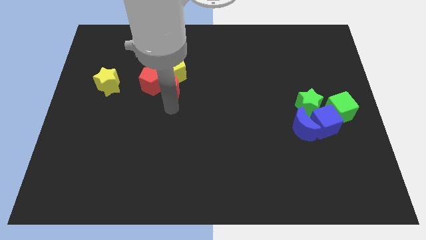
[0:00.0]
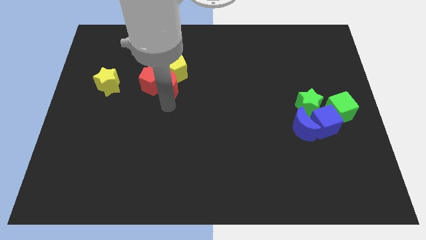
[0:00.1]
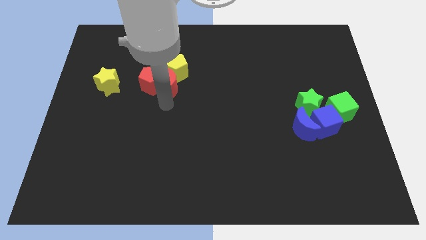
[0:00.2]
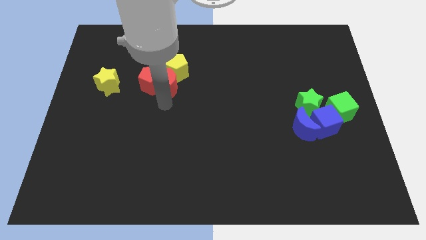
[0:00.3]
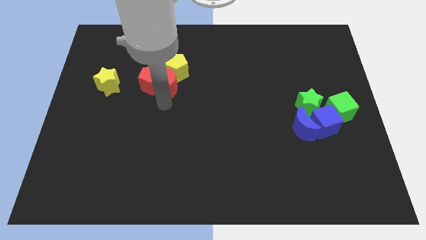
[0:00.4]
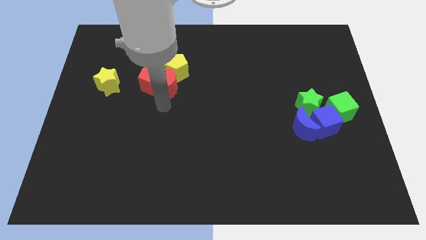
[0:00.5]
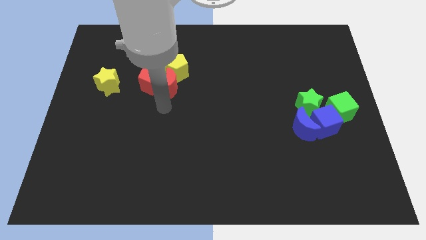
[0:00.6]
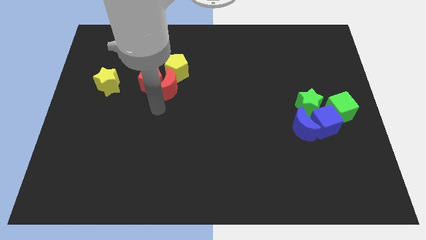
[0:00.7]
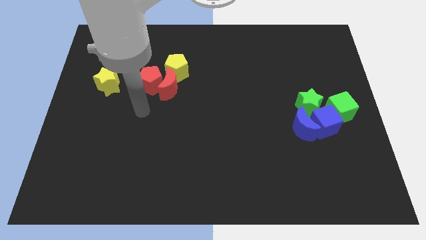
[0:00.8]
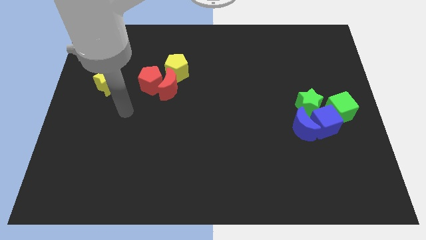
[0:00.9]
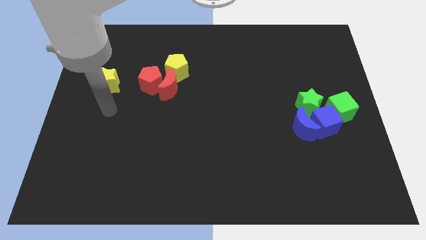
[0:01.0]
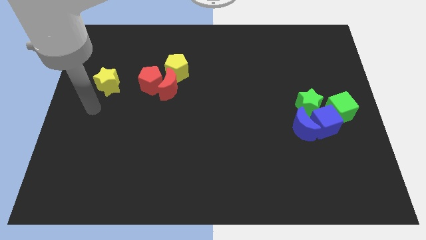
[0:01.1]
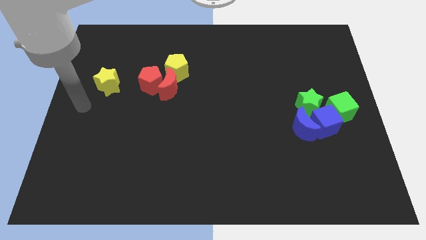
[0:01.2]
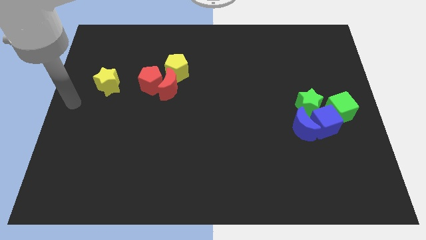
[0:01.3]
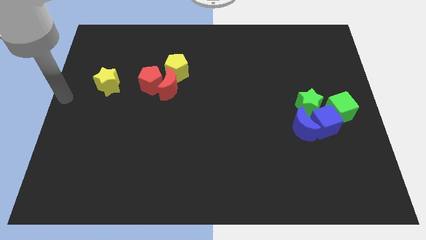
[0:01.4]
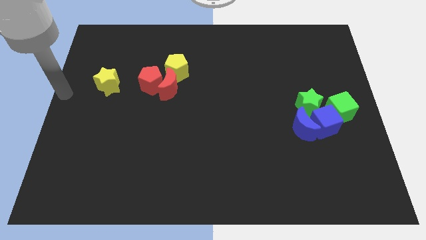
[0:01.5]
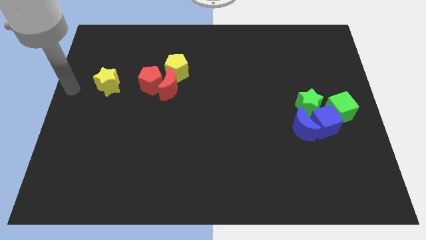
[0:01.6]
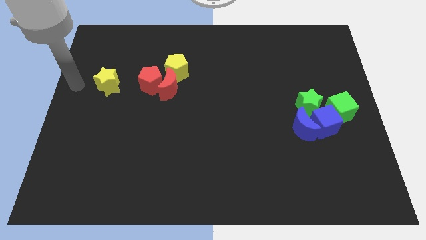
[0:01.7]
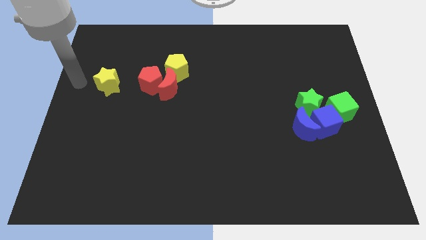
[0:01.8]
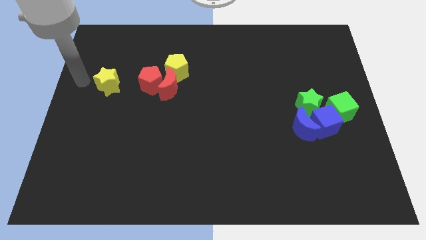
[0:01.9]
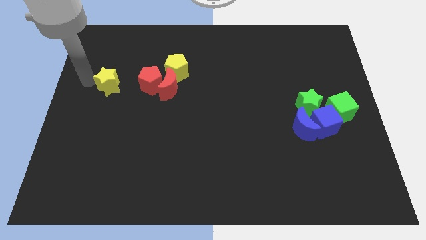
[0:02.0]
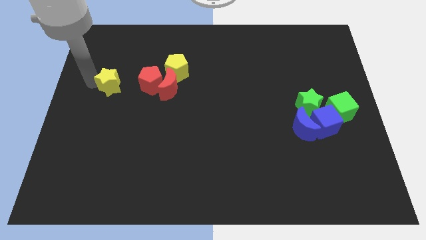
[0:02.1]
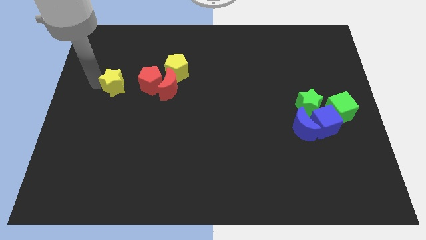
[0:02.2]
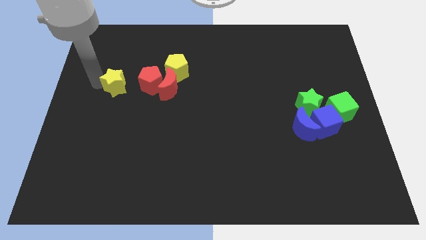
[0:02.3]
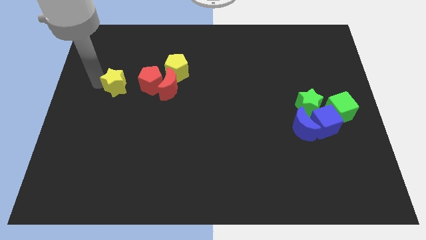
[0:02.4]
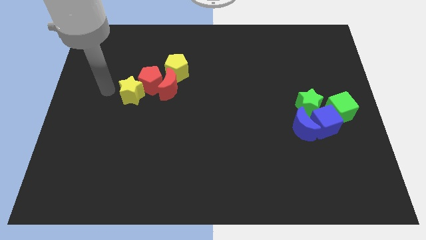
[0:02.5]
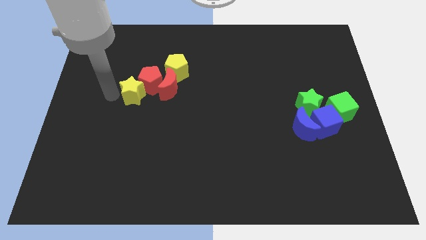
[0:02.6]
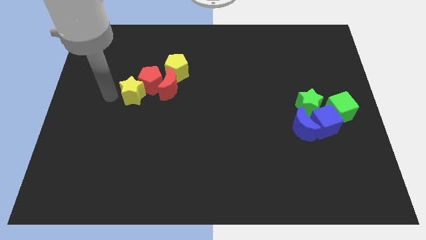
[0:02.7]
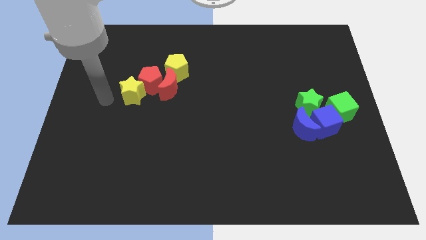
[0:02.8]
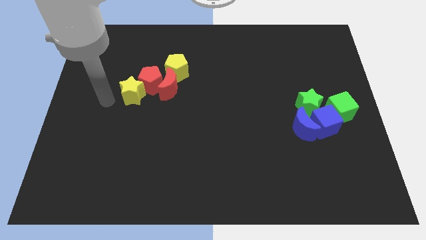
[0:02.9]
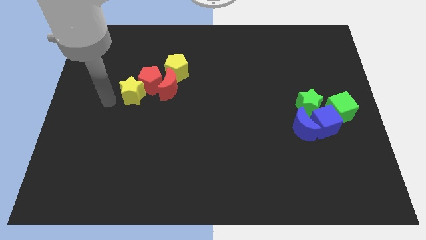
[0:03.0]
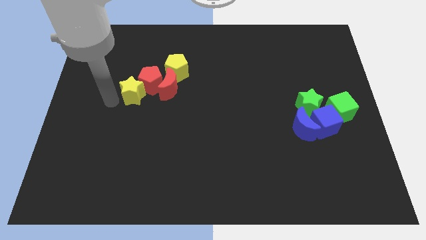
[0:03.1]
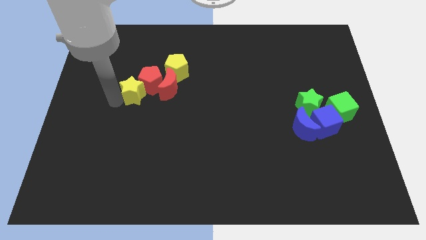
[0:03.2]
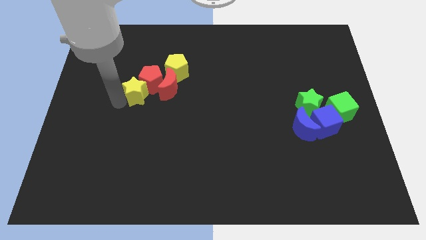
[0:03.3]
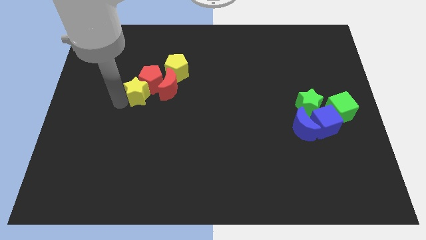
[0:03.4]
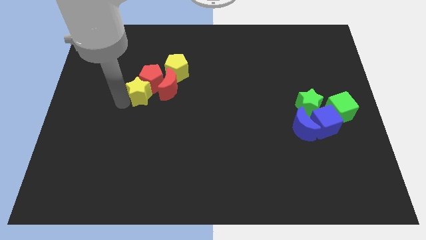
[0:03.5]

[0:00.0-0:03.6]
push the yellow star into the red pentagon

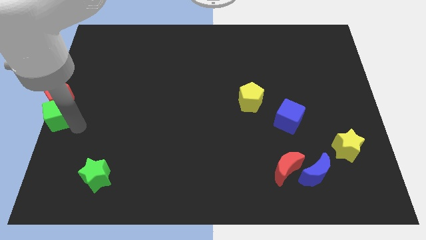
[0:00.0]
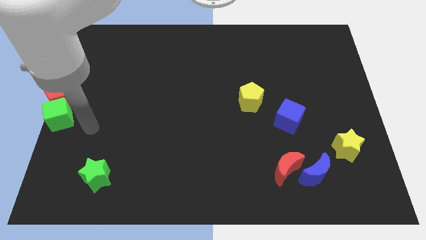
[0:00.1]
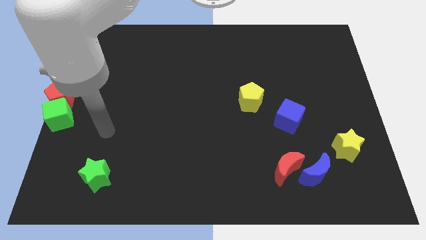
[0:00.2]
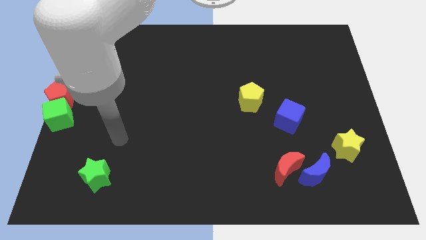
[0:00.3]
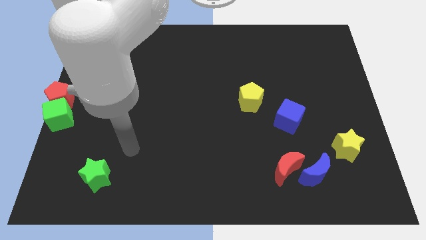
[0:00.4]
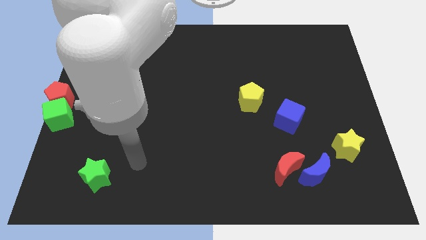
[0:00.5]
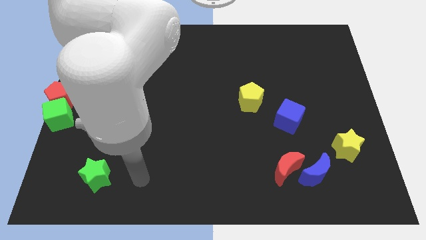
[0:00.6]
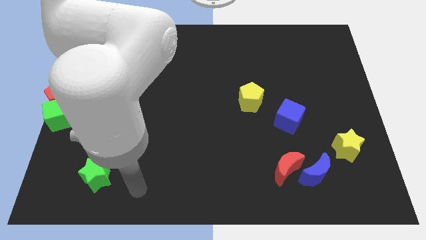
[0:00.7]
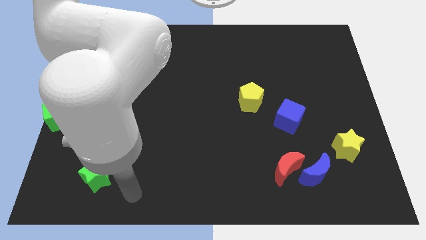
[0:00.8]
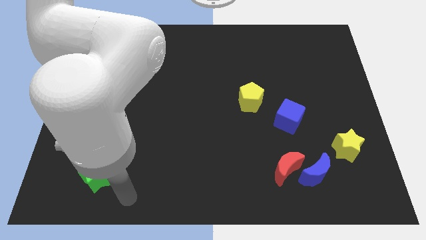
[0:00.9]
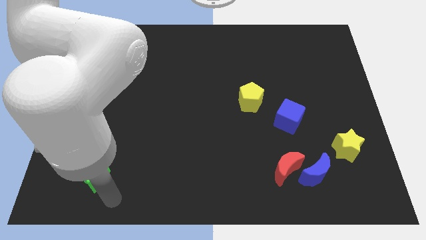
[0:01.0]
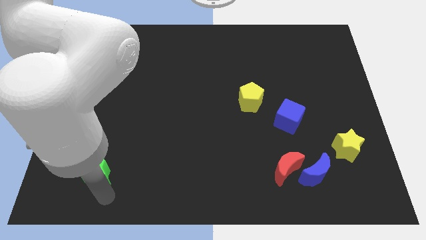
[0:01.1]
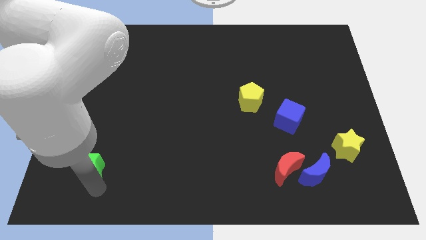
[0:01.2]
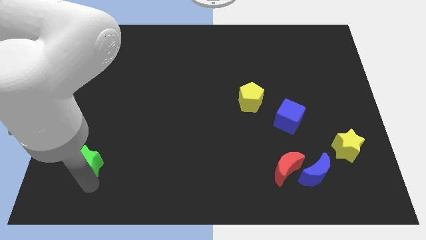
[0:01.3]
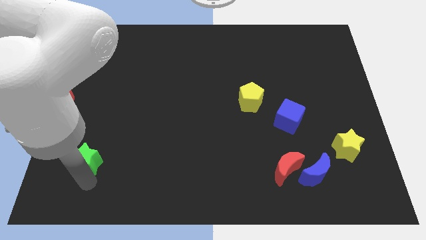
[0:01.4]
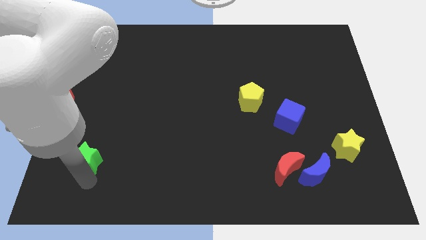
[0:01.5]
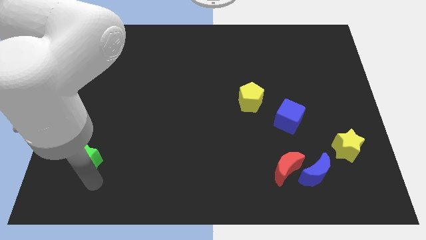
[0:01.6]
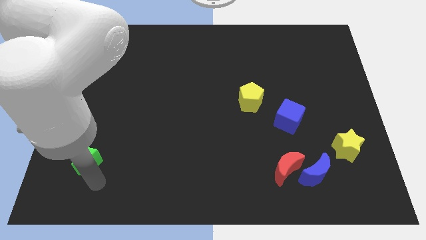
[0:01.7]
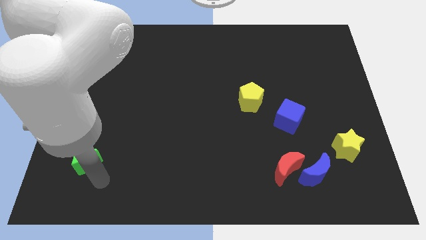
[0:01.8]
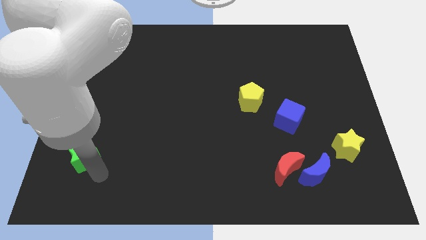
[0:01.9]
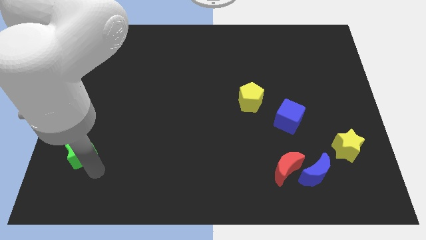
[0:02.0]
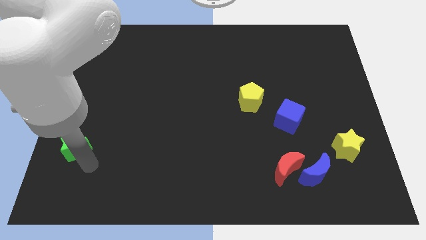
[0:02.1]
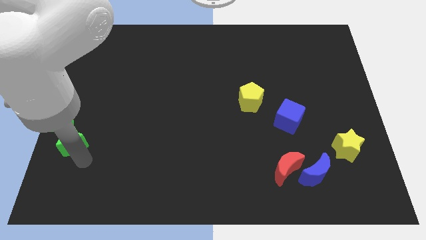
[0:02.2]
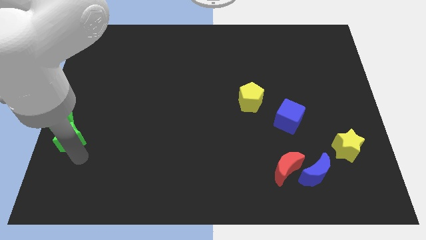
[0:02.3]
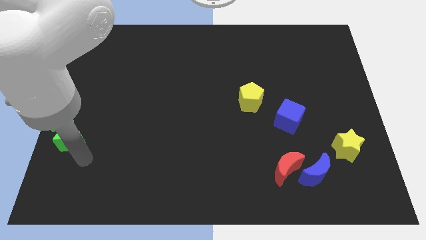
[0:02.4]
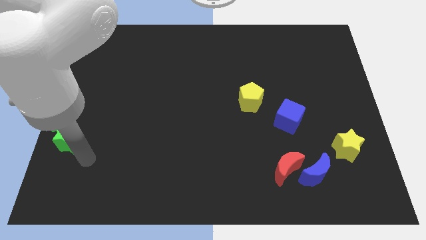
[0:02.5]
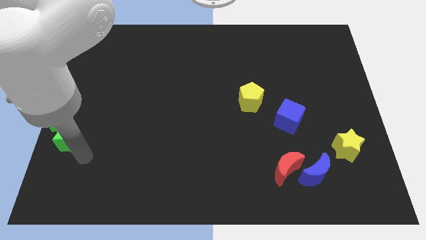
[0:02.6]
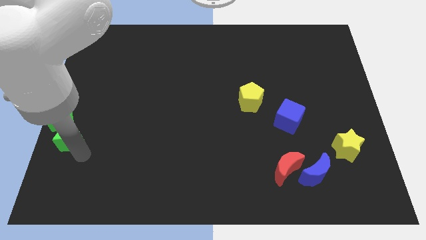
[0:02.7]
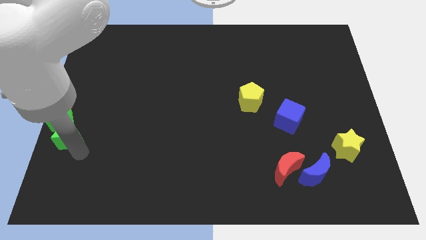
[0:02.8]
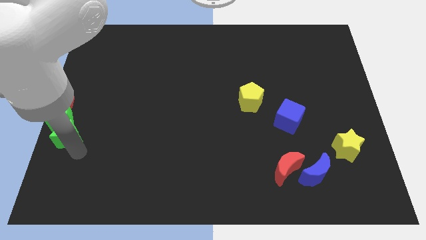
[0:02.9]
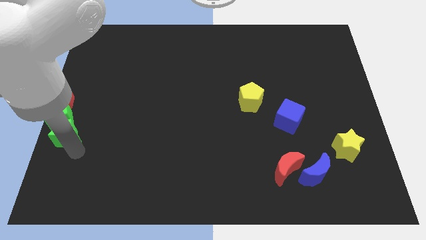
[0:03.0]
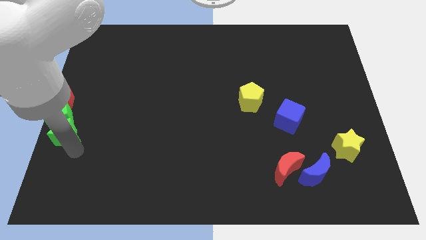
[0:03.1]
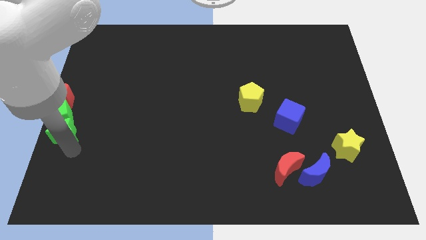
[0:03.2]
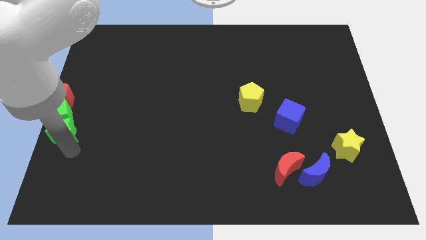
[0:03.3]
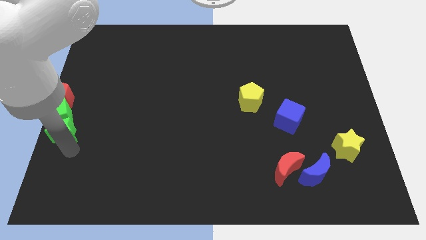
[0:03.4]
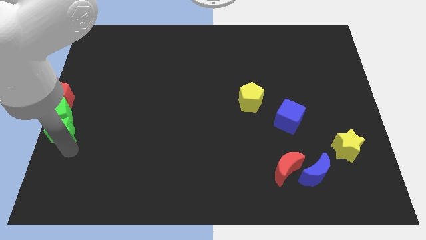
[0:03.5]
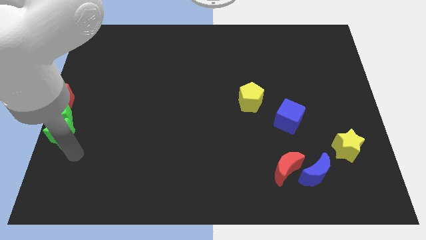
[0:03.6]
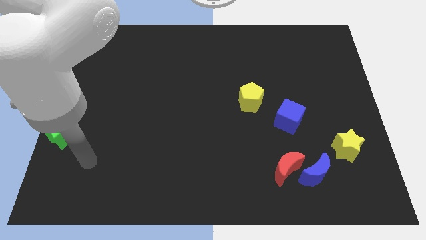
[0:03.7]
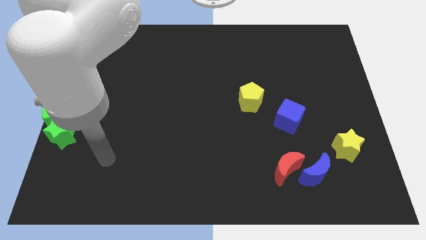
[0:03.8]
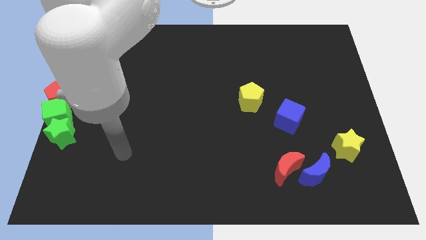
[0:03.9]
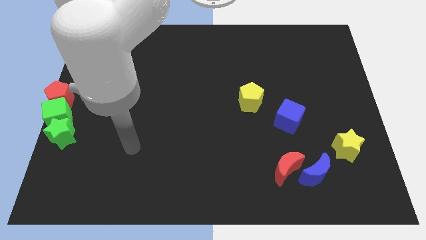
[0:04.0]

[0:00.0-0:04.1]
place green star to the bottom of green cube

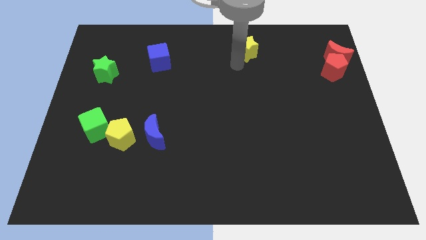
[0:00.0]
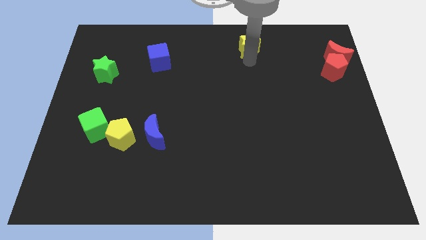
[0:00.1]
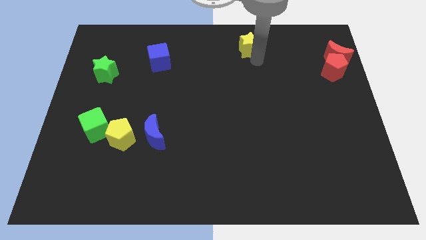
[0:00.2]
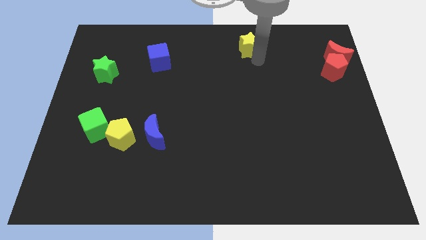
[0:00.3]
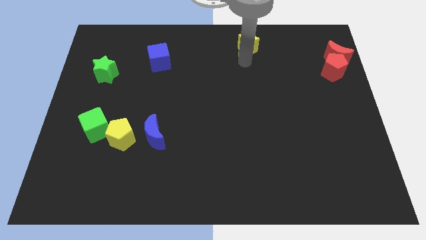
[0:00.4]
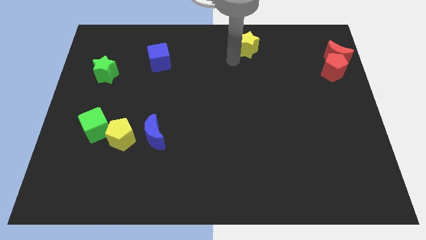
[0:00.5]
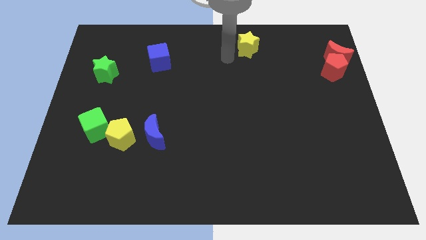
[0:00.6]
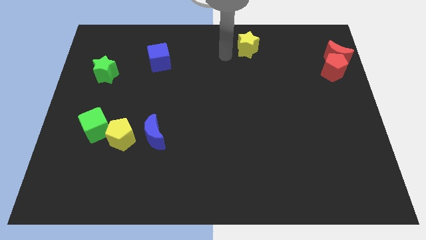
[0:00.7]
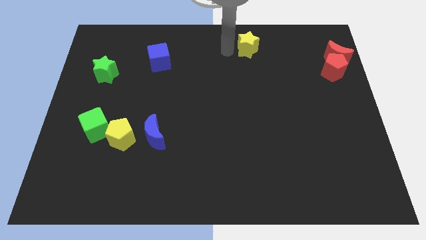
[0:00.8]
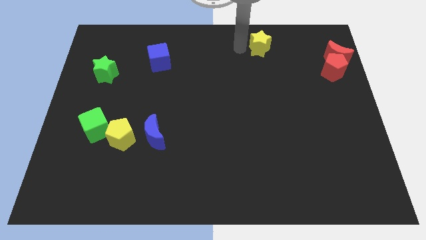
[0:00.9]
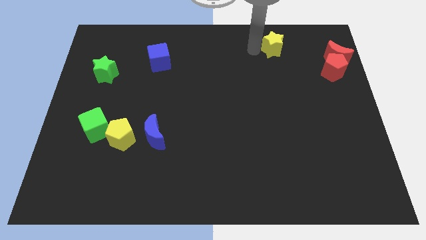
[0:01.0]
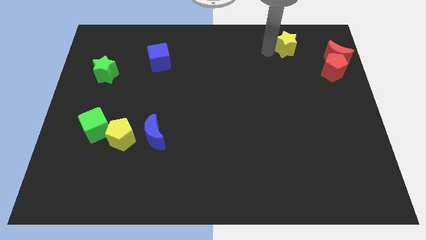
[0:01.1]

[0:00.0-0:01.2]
push yellow star slightly towards right side of the board

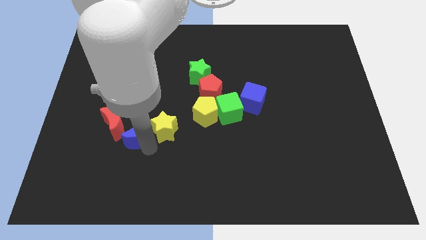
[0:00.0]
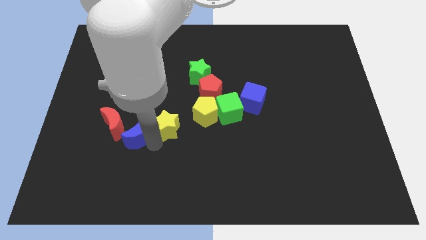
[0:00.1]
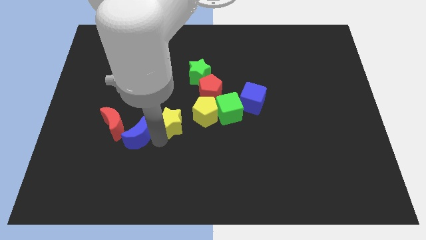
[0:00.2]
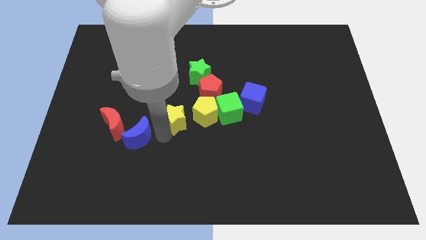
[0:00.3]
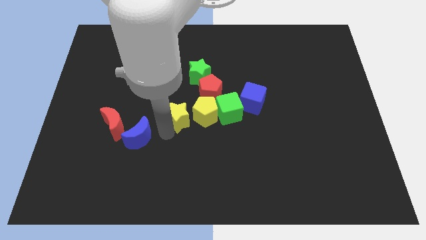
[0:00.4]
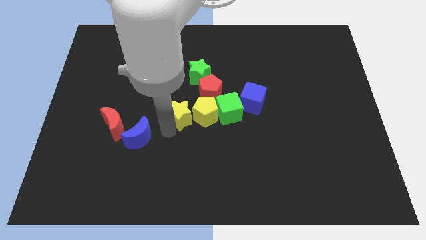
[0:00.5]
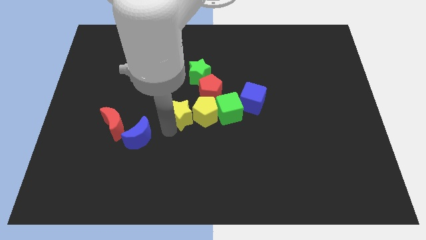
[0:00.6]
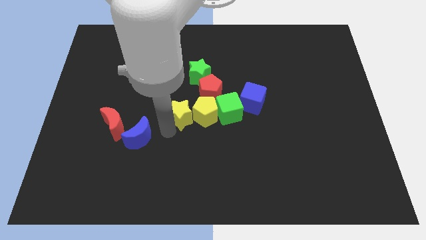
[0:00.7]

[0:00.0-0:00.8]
place the yellow star left to the yellow pentagon
